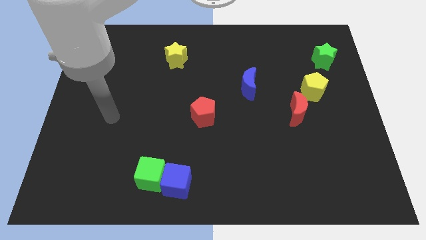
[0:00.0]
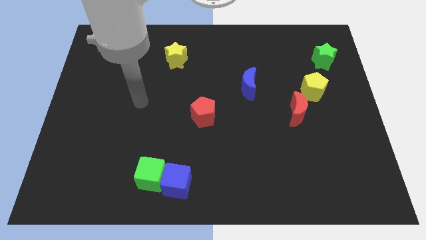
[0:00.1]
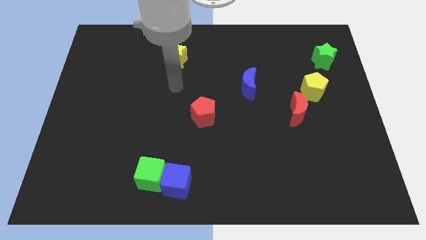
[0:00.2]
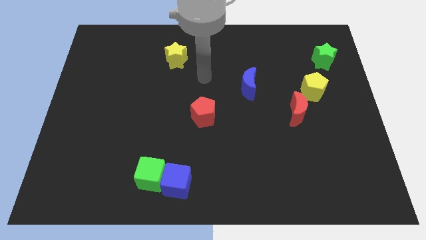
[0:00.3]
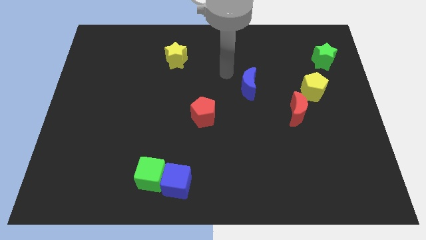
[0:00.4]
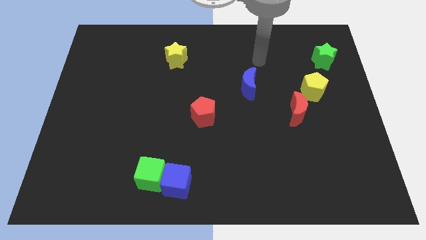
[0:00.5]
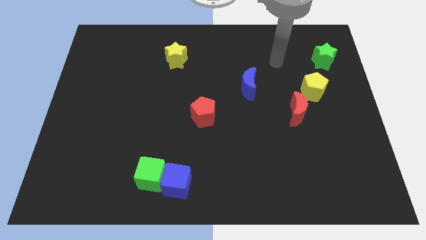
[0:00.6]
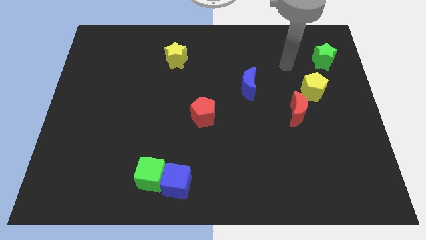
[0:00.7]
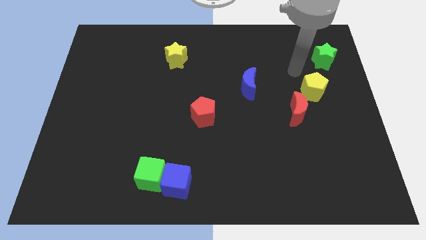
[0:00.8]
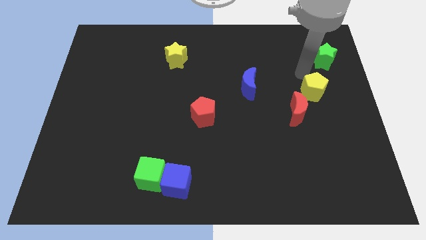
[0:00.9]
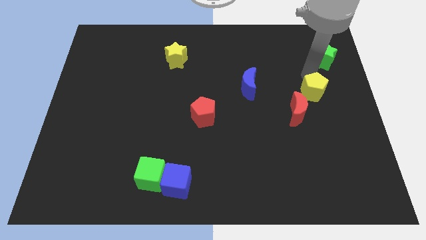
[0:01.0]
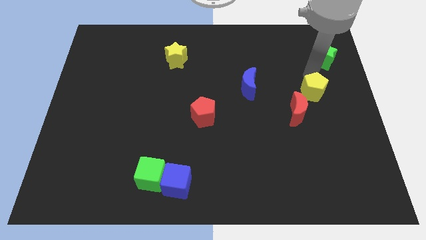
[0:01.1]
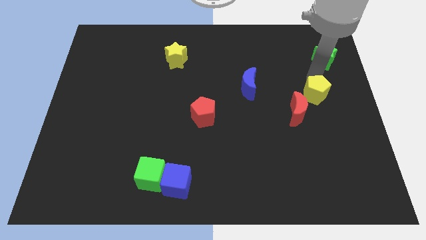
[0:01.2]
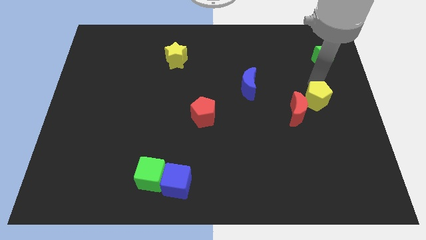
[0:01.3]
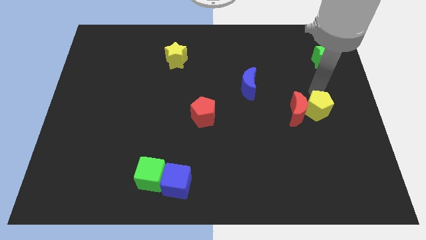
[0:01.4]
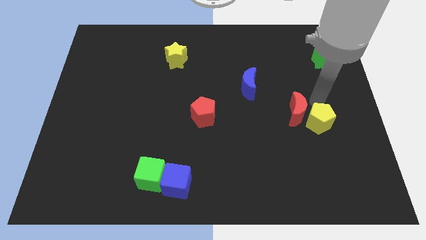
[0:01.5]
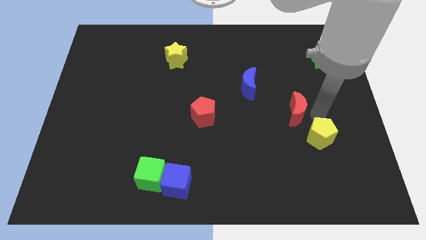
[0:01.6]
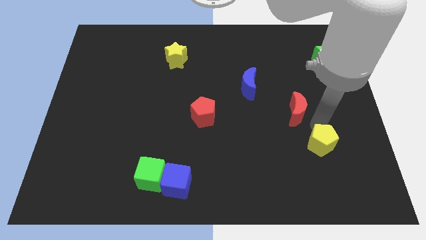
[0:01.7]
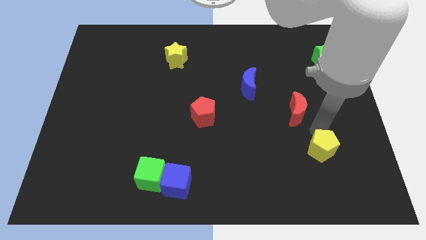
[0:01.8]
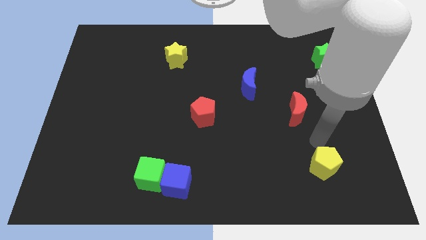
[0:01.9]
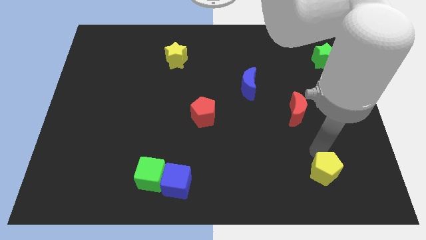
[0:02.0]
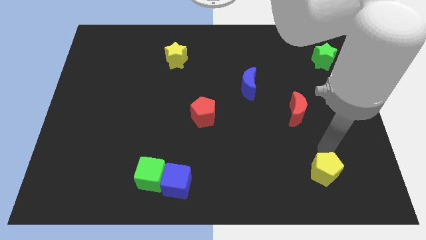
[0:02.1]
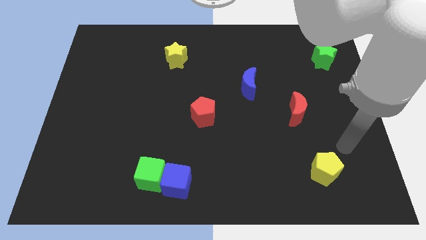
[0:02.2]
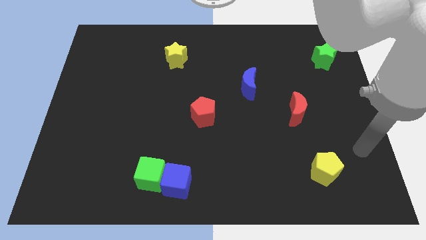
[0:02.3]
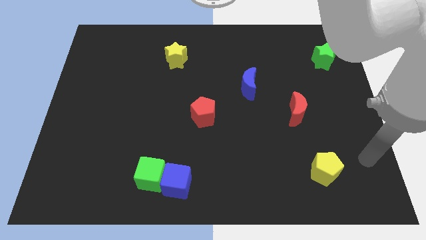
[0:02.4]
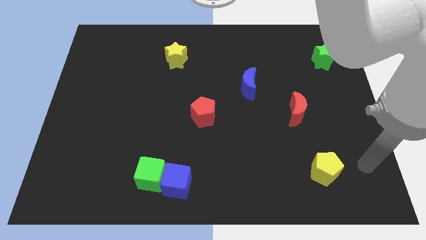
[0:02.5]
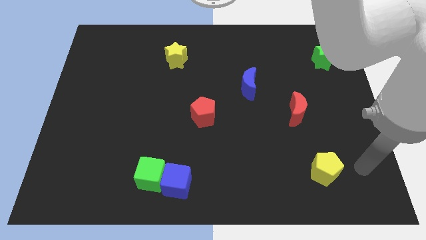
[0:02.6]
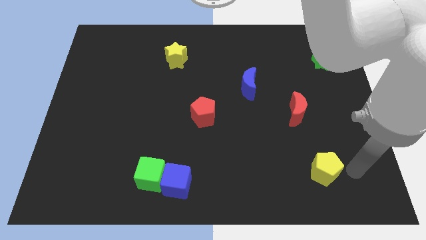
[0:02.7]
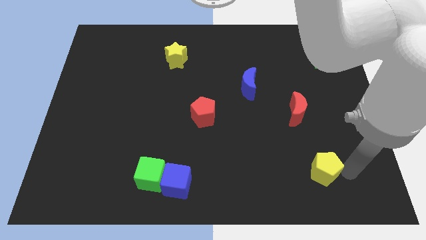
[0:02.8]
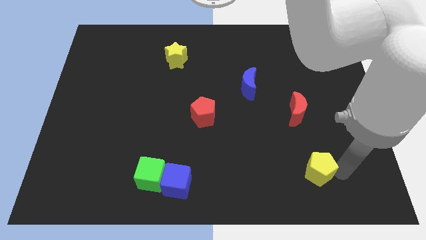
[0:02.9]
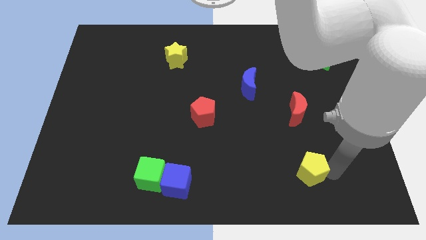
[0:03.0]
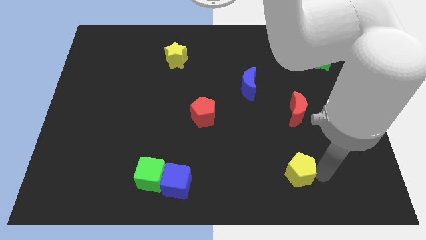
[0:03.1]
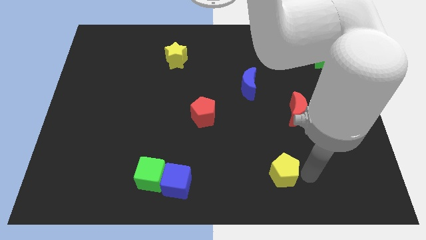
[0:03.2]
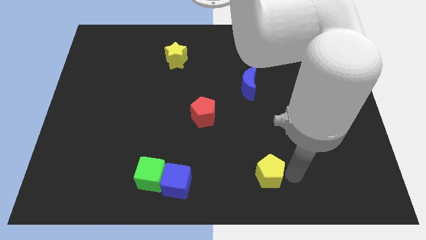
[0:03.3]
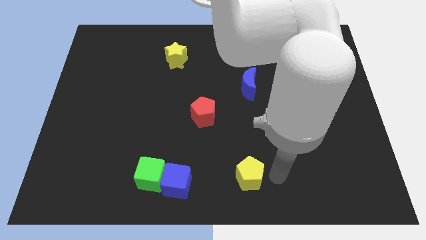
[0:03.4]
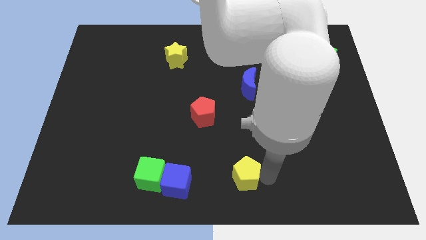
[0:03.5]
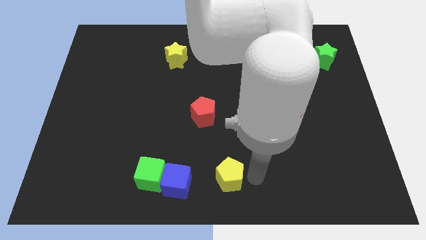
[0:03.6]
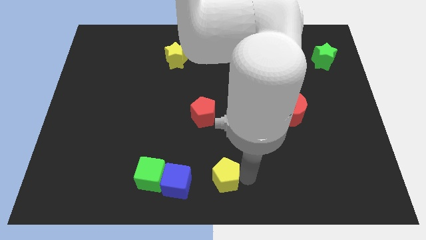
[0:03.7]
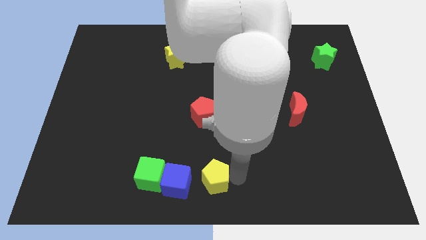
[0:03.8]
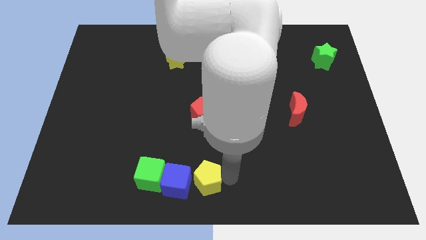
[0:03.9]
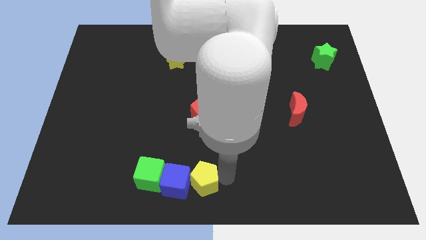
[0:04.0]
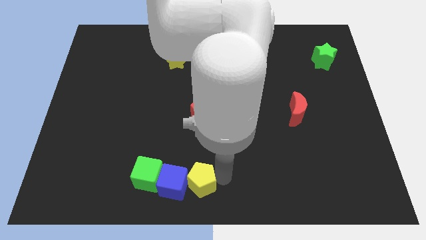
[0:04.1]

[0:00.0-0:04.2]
move the yellow pentagon towards the blue cube

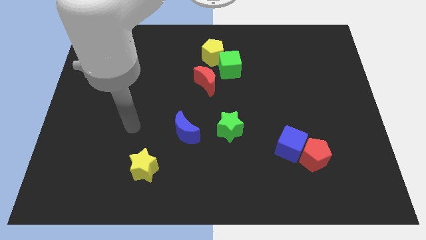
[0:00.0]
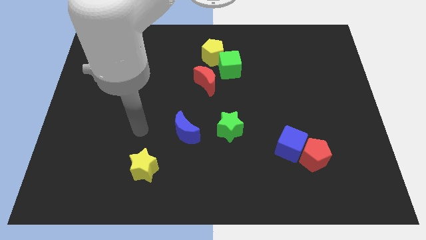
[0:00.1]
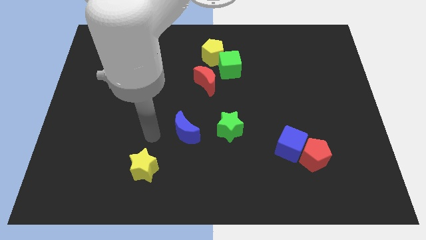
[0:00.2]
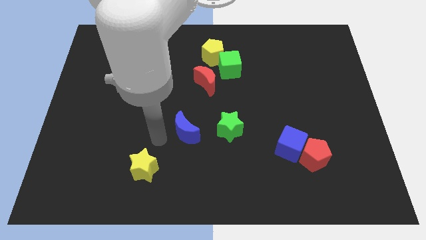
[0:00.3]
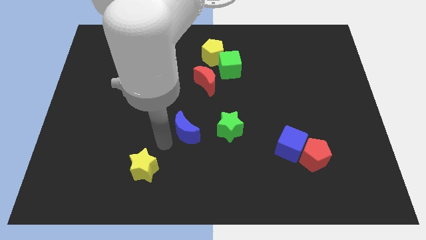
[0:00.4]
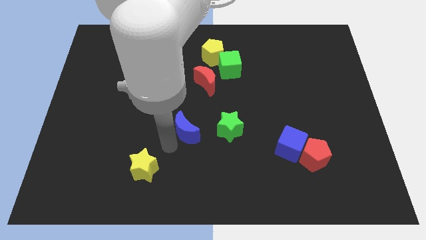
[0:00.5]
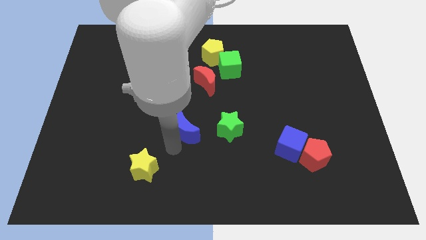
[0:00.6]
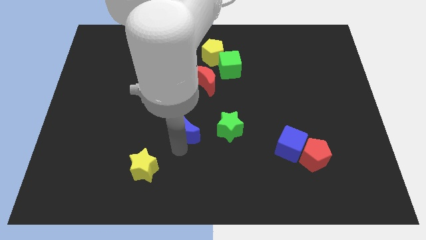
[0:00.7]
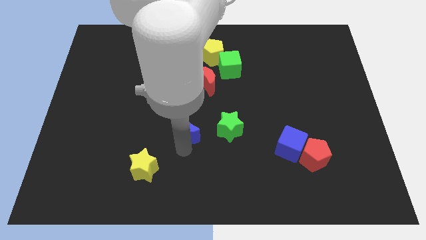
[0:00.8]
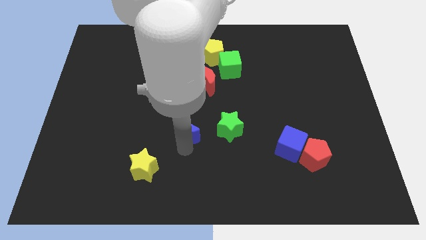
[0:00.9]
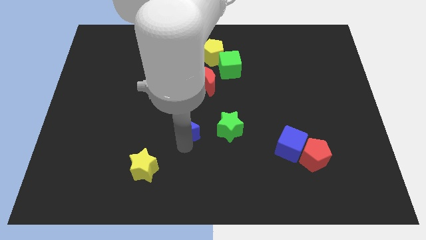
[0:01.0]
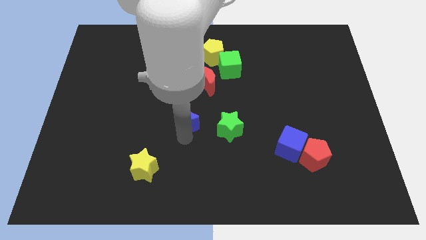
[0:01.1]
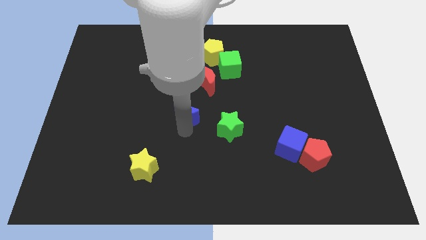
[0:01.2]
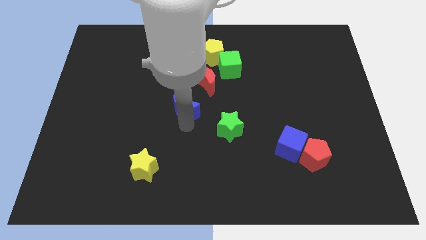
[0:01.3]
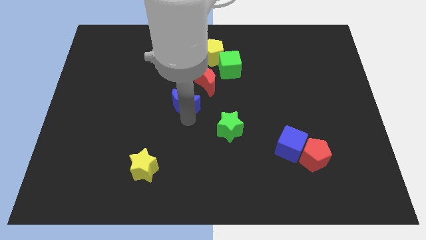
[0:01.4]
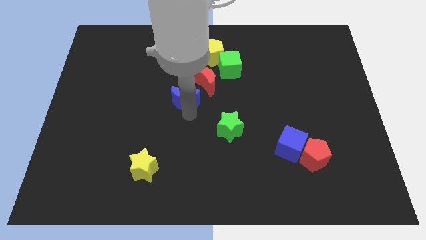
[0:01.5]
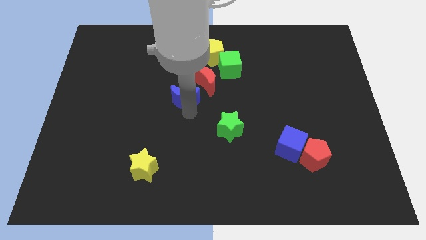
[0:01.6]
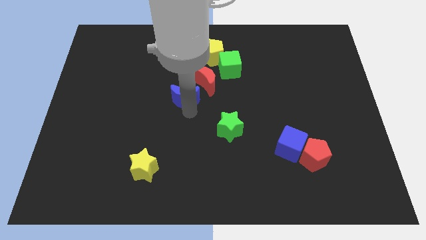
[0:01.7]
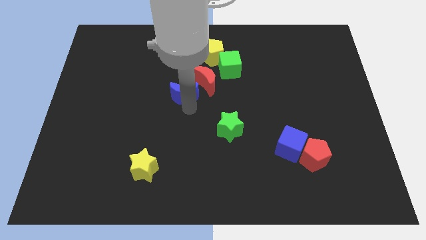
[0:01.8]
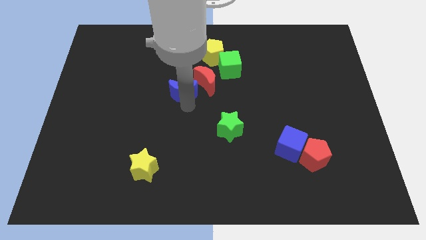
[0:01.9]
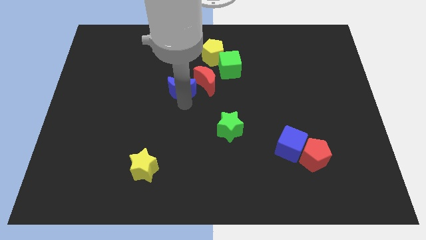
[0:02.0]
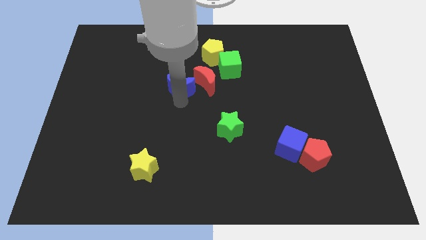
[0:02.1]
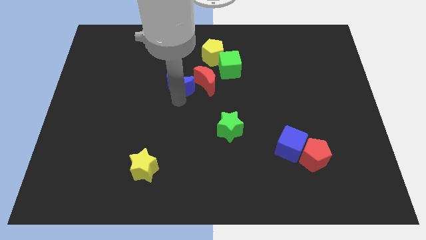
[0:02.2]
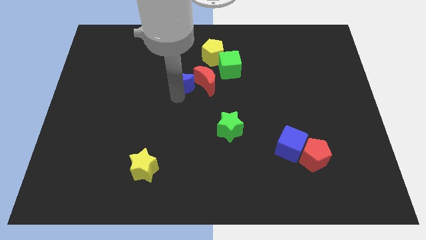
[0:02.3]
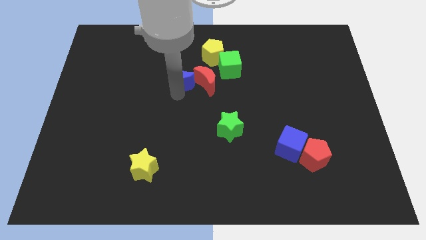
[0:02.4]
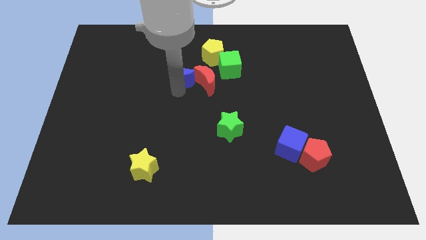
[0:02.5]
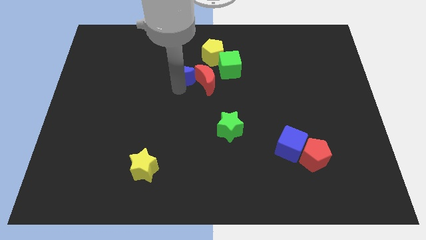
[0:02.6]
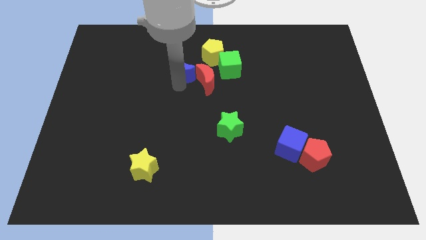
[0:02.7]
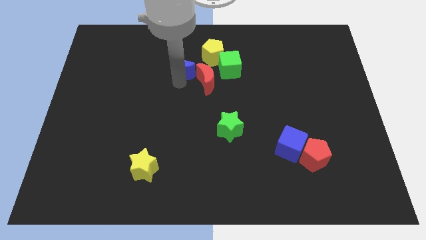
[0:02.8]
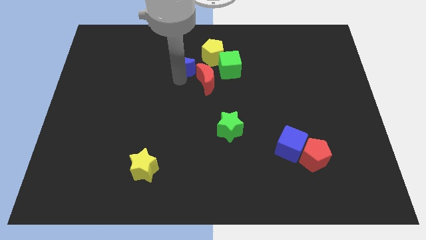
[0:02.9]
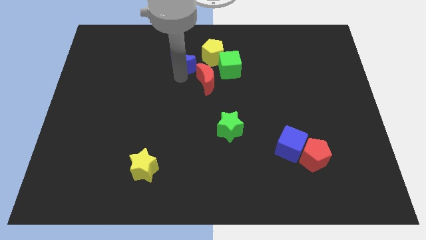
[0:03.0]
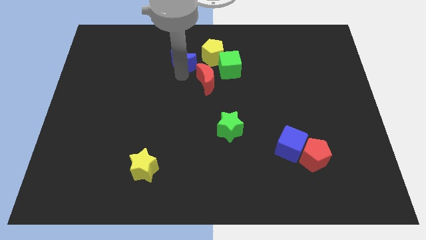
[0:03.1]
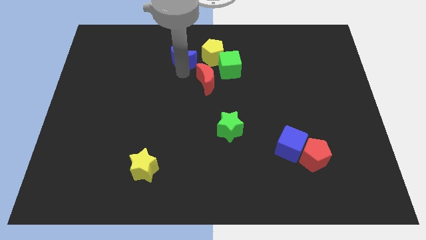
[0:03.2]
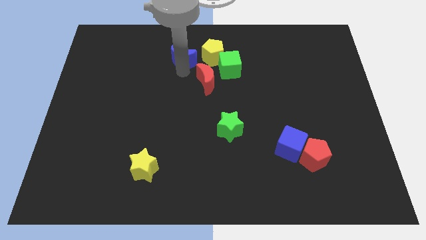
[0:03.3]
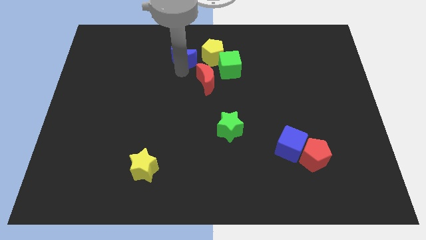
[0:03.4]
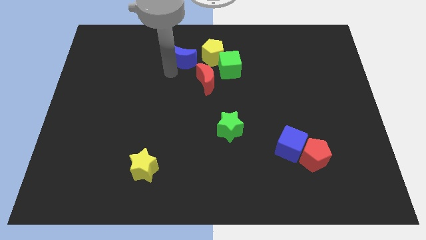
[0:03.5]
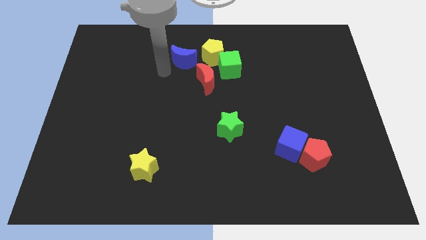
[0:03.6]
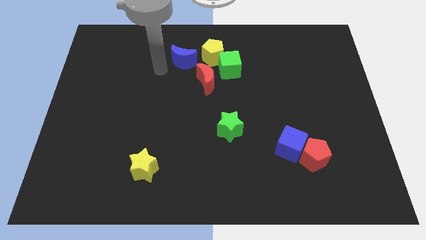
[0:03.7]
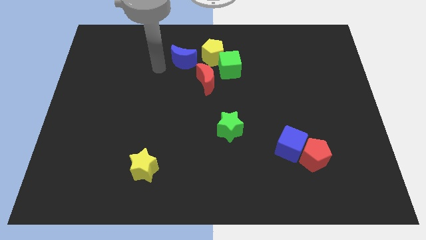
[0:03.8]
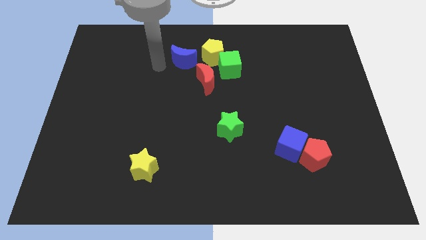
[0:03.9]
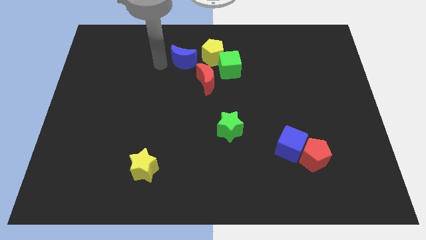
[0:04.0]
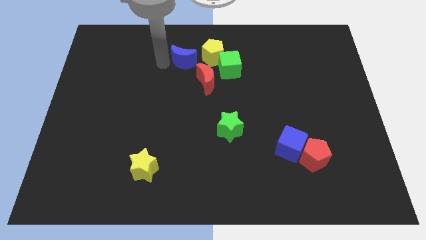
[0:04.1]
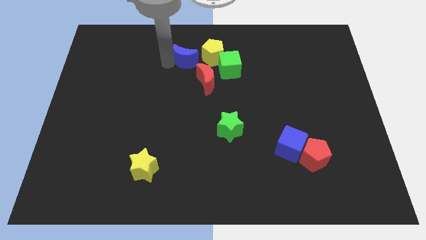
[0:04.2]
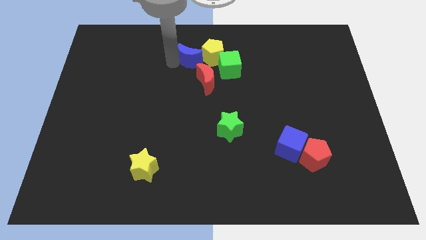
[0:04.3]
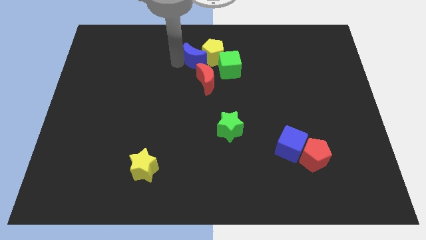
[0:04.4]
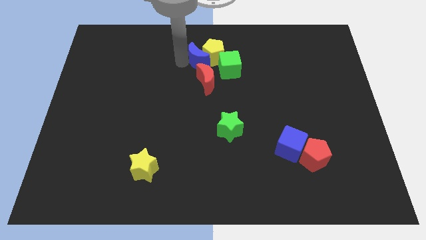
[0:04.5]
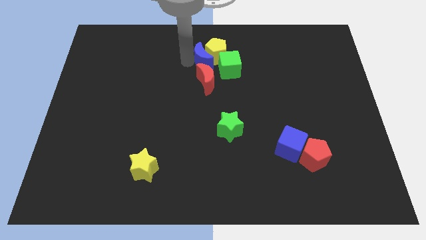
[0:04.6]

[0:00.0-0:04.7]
push the blue moon towards the yellow pentagon
